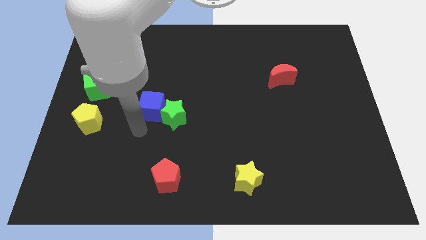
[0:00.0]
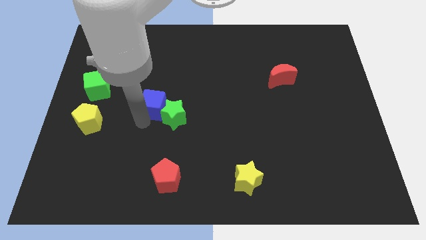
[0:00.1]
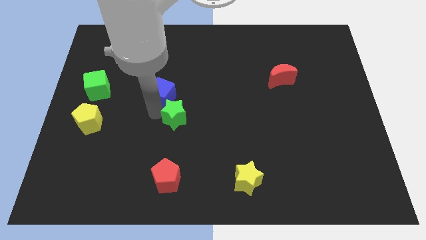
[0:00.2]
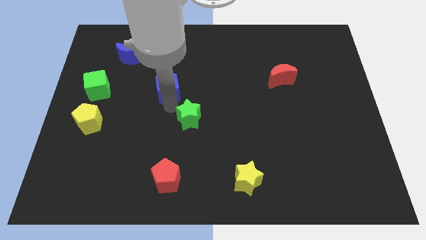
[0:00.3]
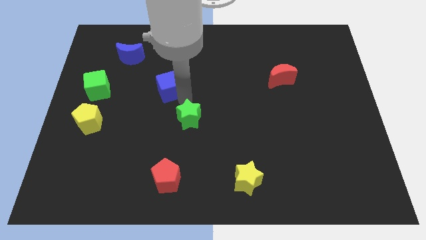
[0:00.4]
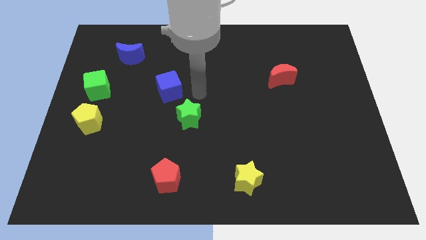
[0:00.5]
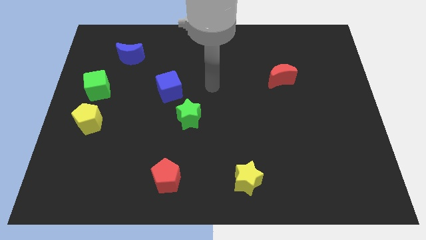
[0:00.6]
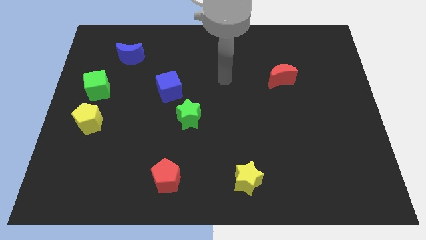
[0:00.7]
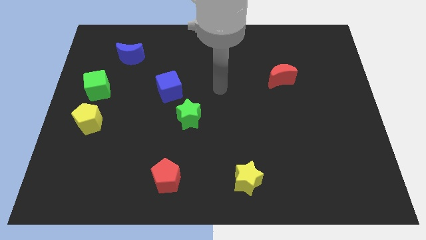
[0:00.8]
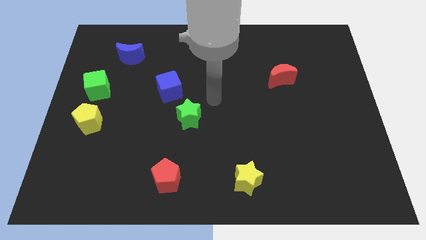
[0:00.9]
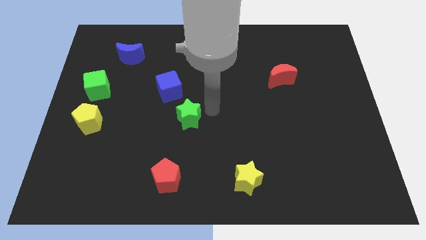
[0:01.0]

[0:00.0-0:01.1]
seperate blue cube and green star

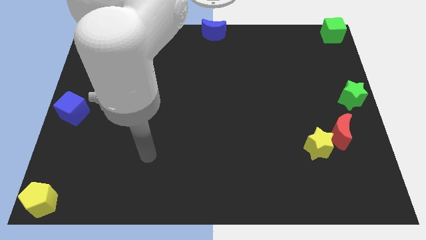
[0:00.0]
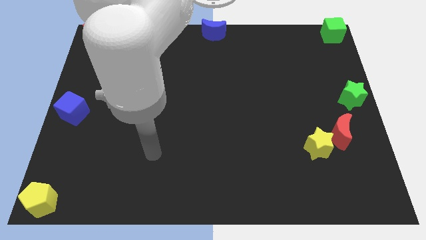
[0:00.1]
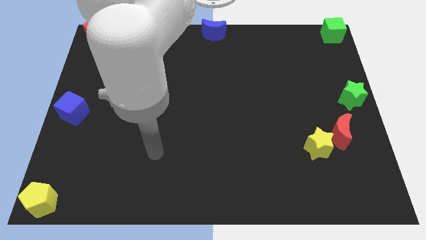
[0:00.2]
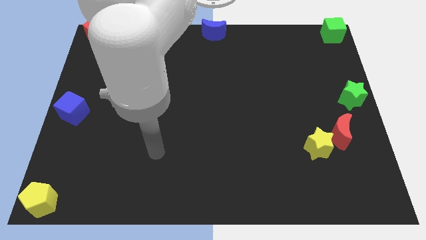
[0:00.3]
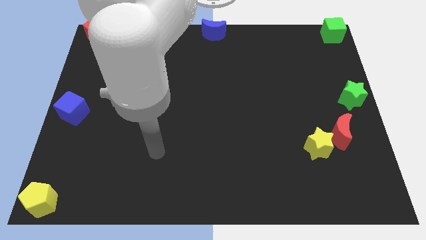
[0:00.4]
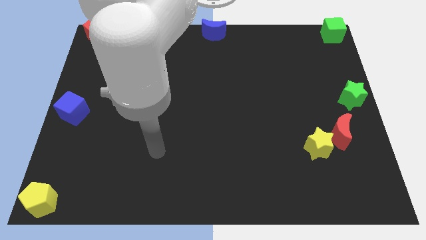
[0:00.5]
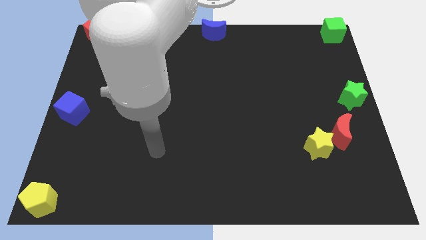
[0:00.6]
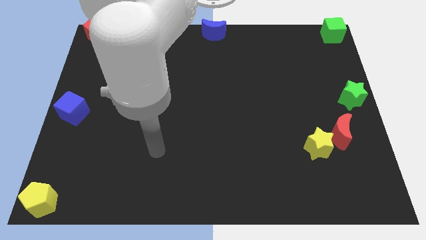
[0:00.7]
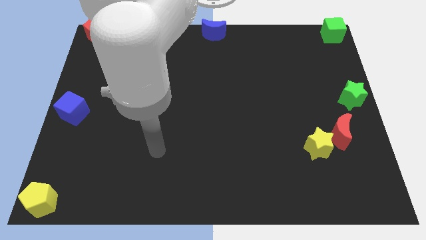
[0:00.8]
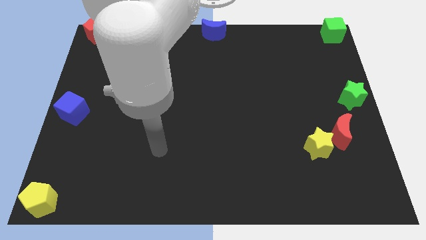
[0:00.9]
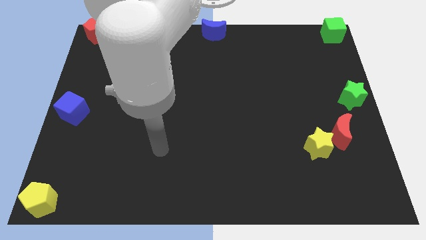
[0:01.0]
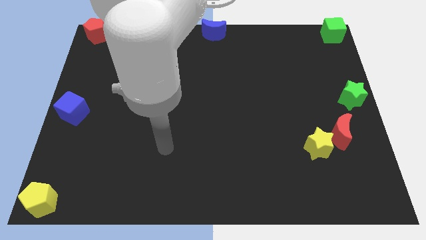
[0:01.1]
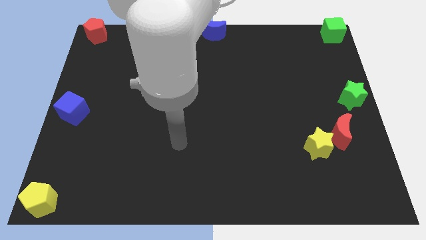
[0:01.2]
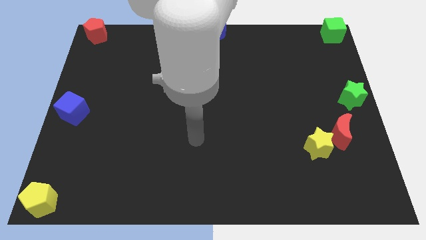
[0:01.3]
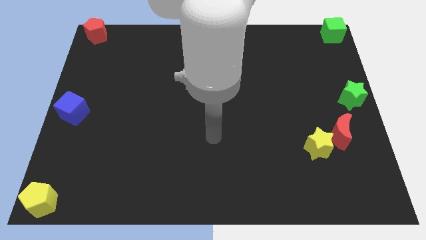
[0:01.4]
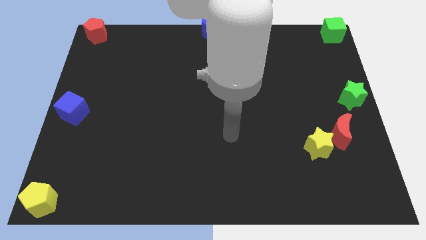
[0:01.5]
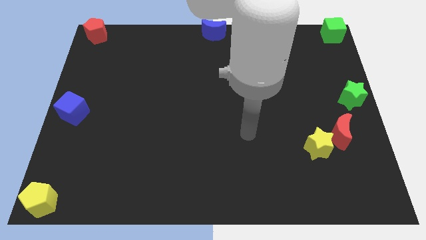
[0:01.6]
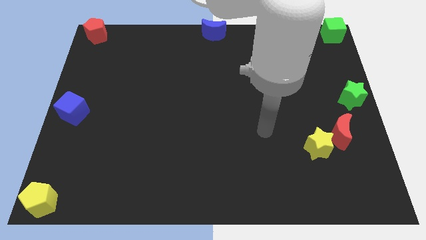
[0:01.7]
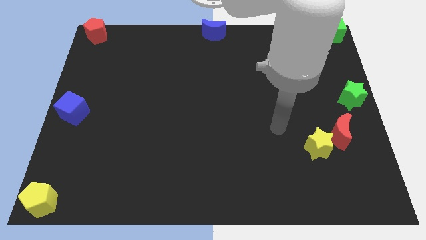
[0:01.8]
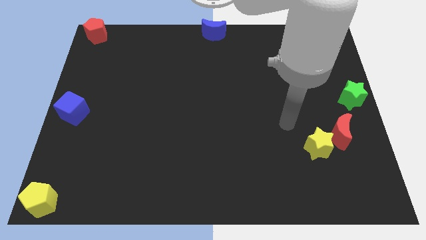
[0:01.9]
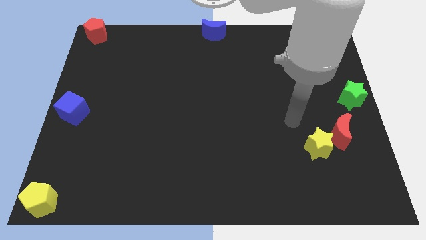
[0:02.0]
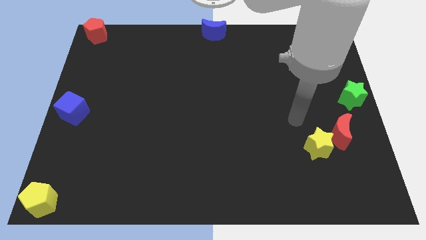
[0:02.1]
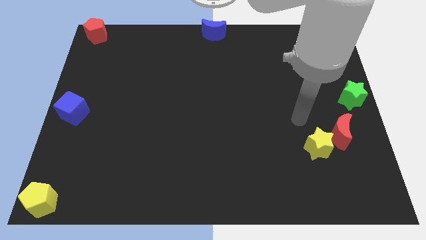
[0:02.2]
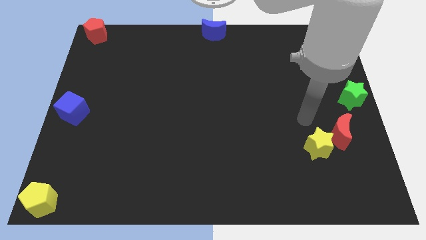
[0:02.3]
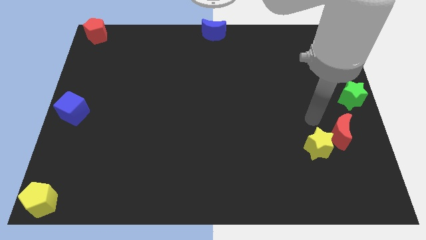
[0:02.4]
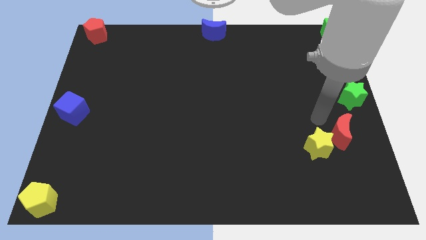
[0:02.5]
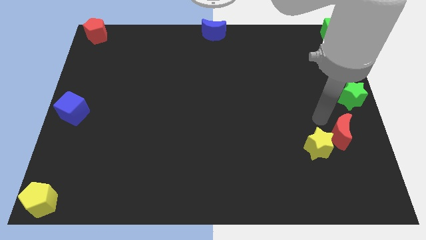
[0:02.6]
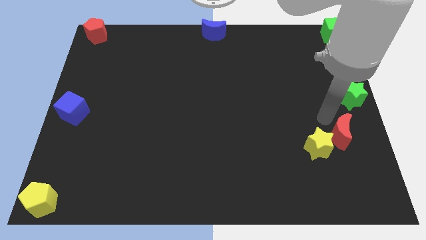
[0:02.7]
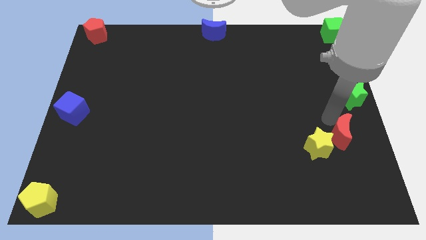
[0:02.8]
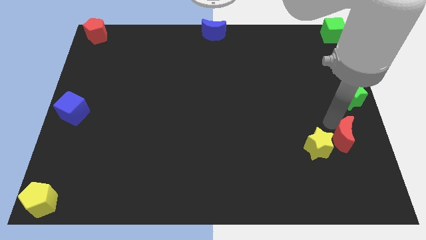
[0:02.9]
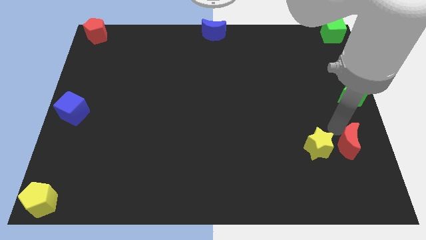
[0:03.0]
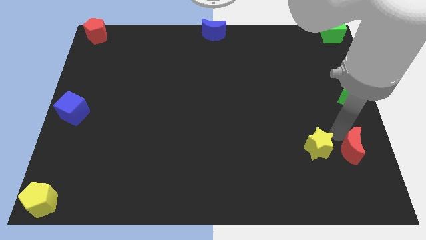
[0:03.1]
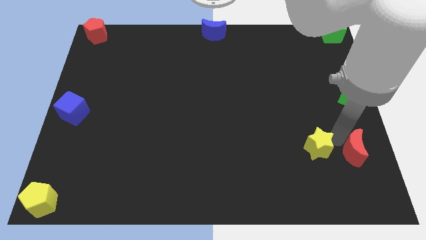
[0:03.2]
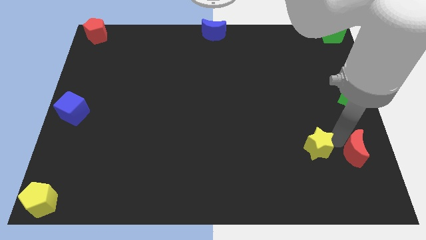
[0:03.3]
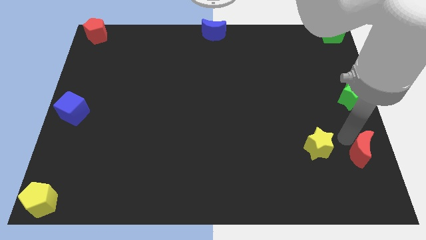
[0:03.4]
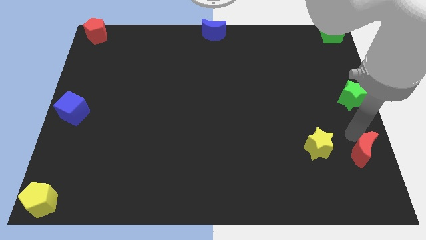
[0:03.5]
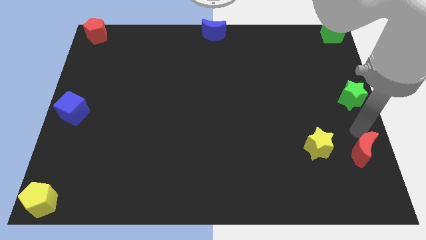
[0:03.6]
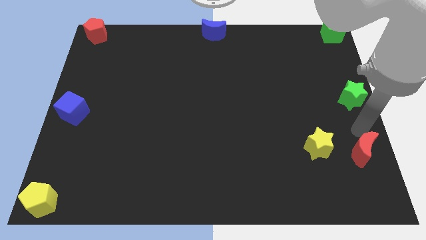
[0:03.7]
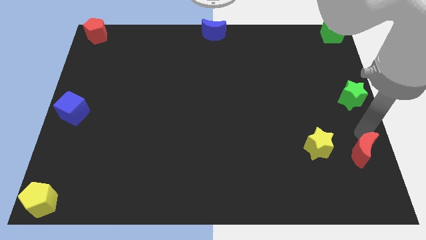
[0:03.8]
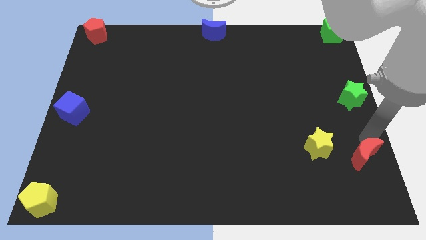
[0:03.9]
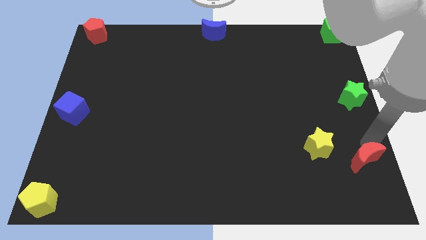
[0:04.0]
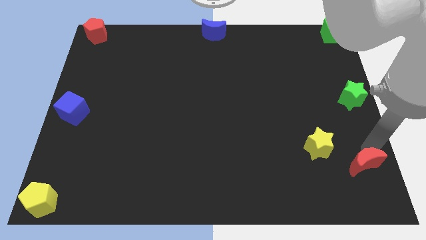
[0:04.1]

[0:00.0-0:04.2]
move your arm towards the red moon

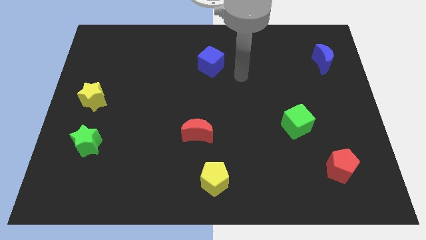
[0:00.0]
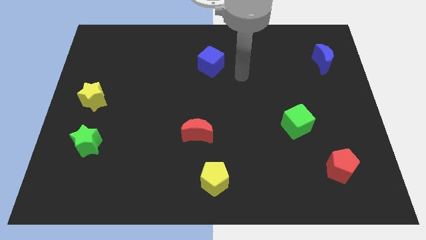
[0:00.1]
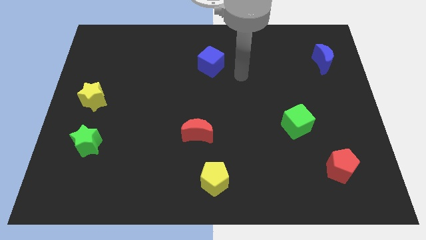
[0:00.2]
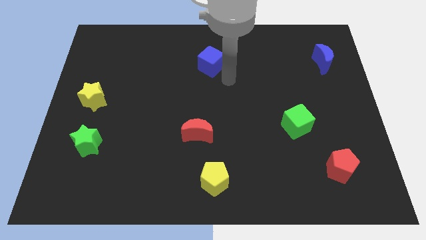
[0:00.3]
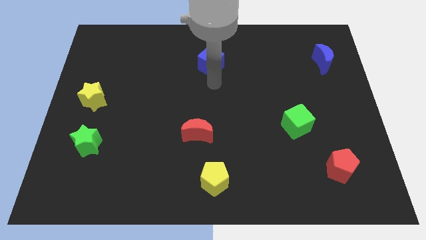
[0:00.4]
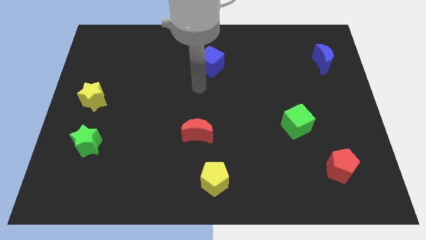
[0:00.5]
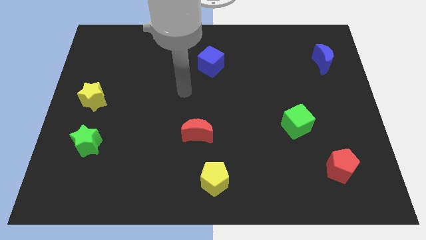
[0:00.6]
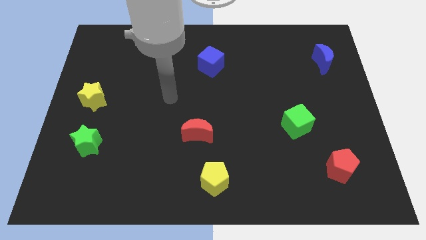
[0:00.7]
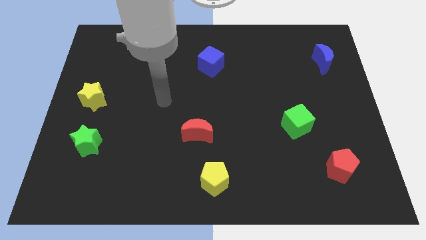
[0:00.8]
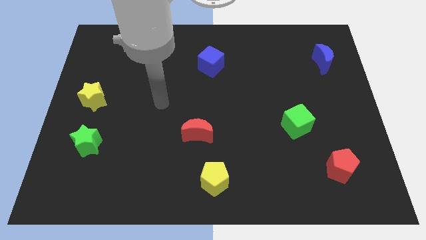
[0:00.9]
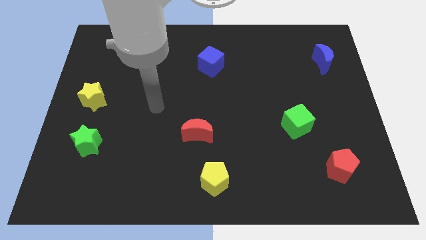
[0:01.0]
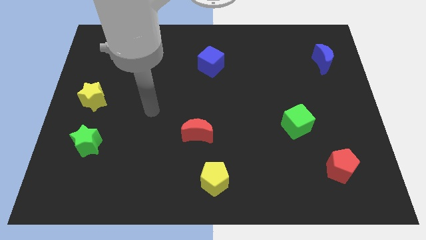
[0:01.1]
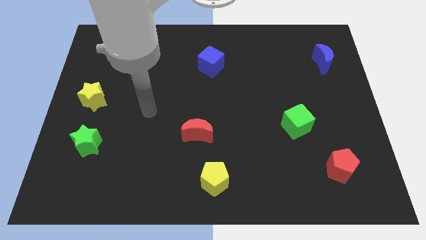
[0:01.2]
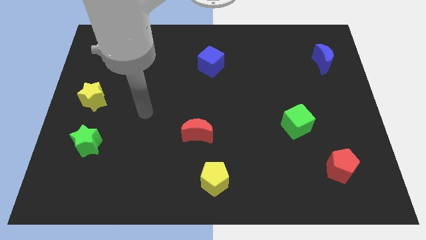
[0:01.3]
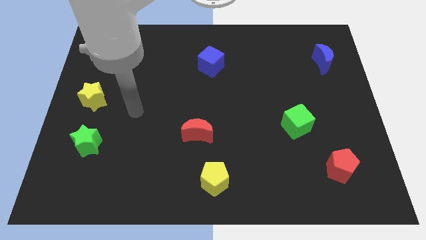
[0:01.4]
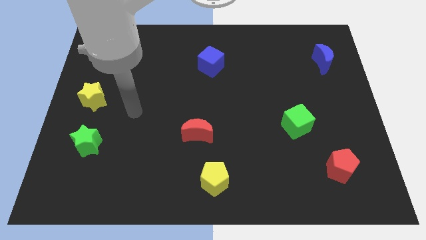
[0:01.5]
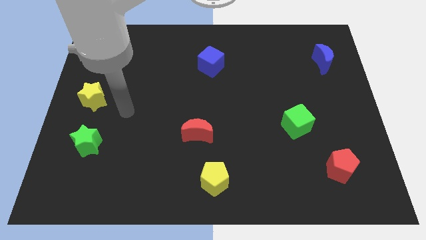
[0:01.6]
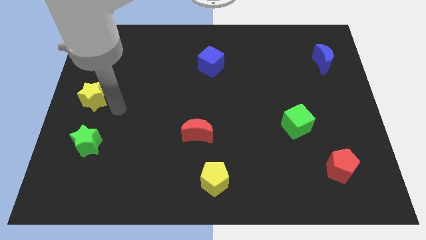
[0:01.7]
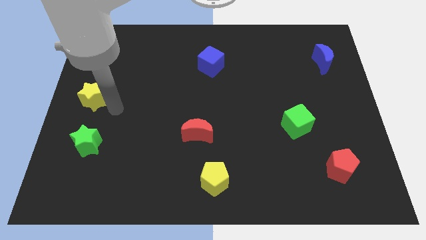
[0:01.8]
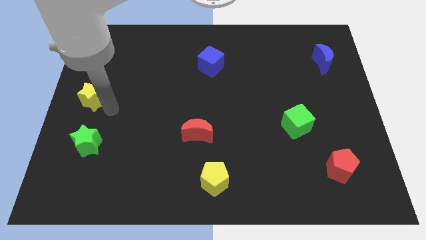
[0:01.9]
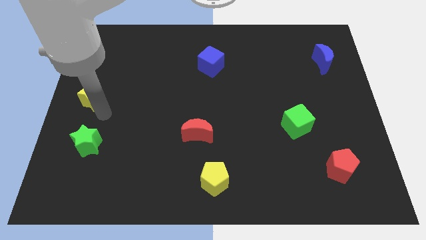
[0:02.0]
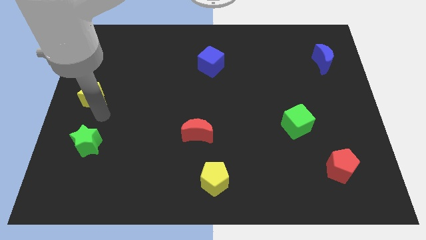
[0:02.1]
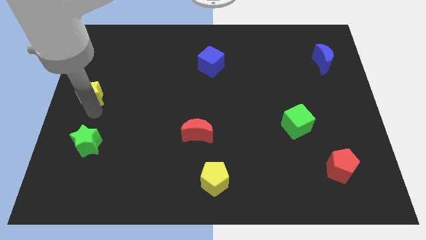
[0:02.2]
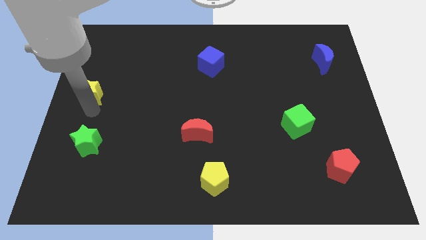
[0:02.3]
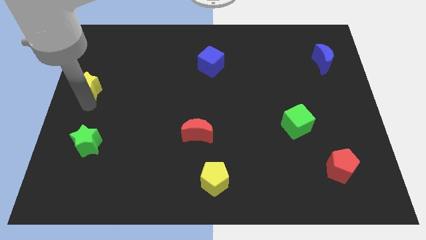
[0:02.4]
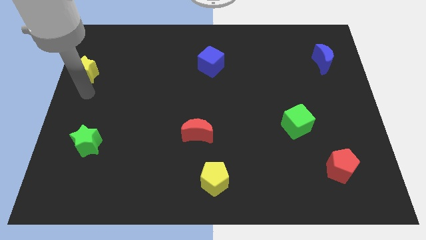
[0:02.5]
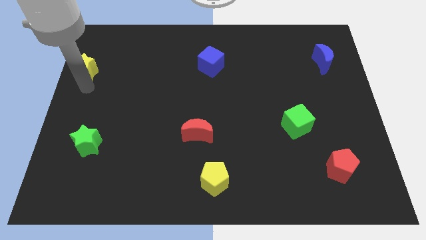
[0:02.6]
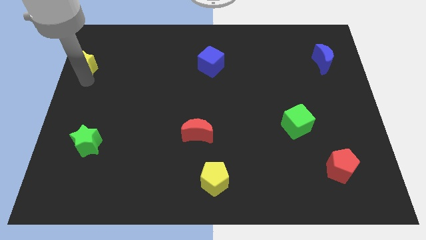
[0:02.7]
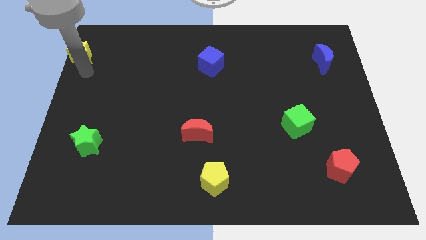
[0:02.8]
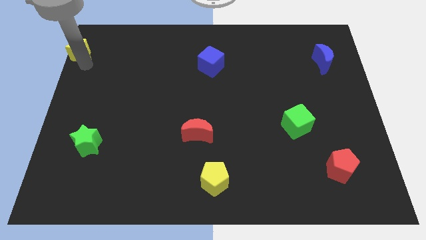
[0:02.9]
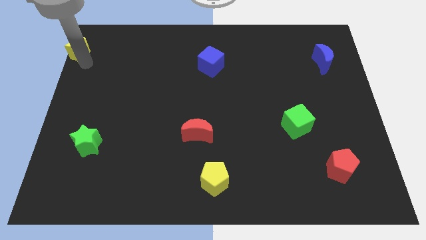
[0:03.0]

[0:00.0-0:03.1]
push the yellow star slightly towards up

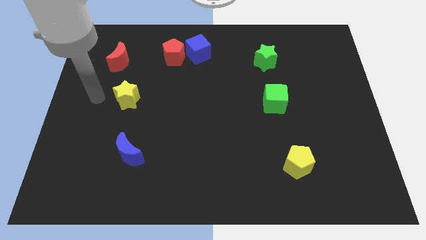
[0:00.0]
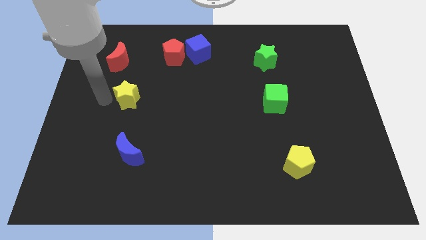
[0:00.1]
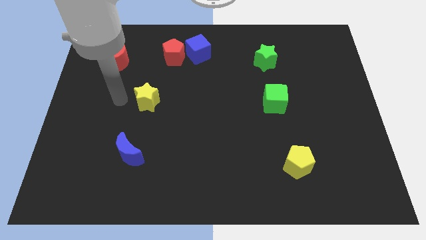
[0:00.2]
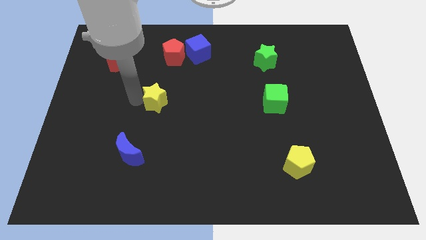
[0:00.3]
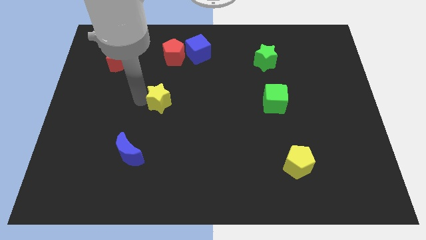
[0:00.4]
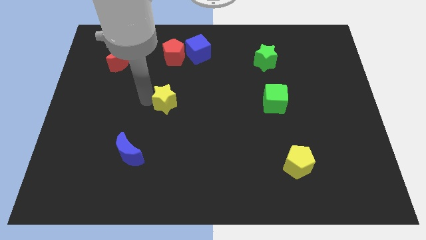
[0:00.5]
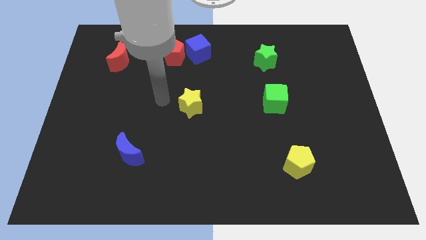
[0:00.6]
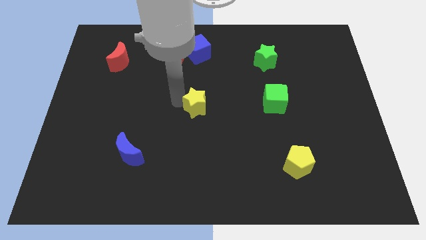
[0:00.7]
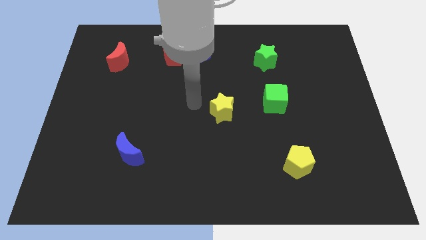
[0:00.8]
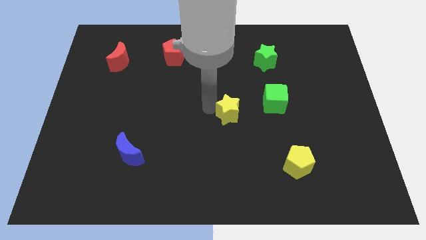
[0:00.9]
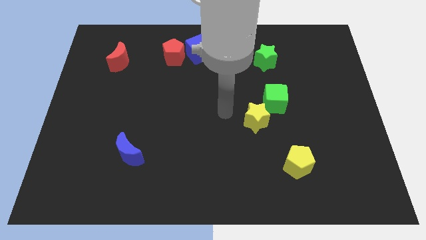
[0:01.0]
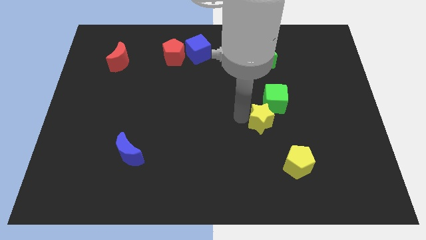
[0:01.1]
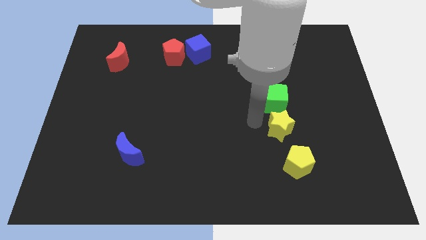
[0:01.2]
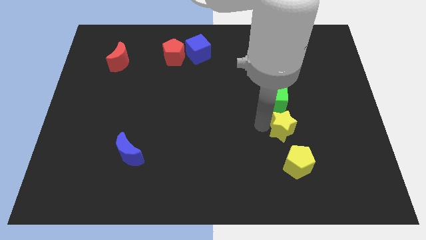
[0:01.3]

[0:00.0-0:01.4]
place the yellow star between the green cube and yellow pentagon
